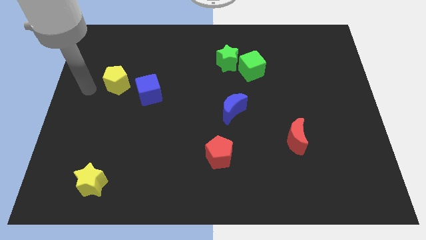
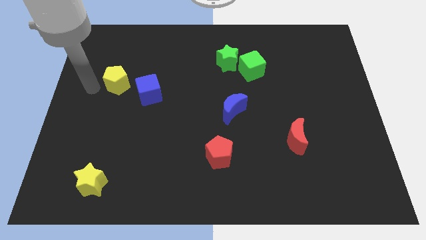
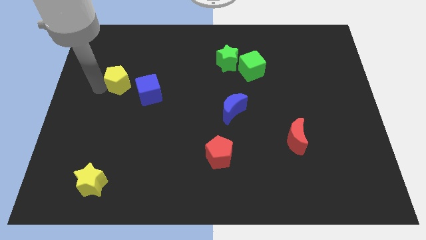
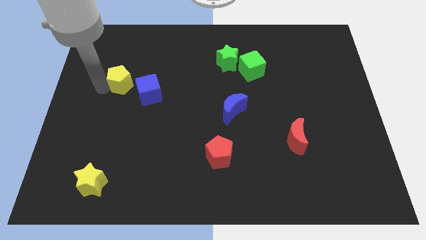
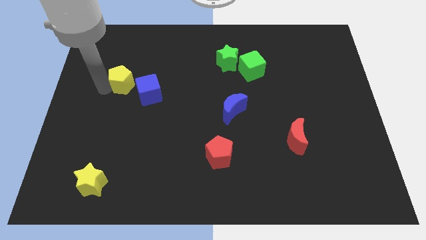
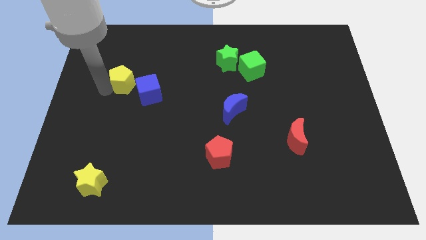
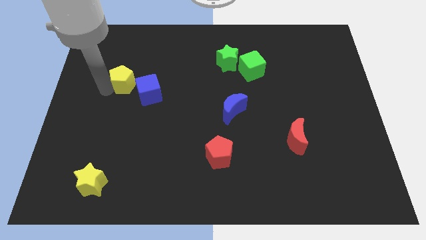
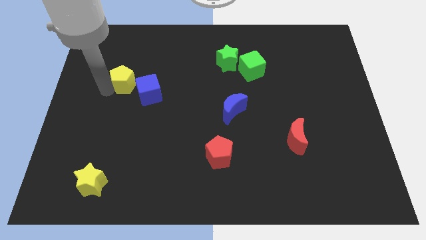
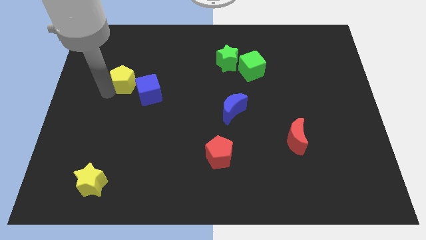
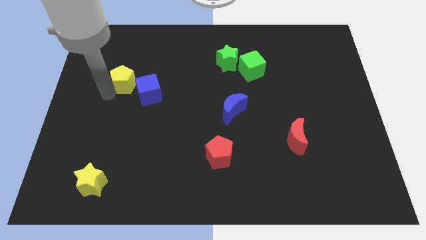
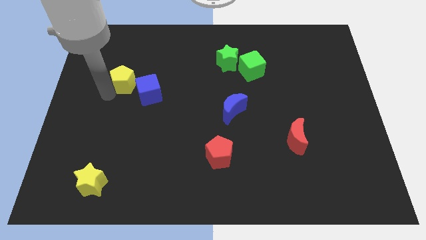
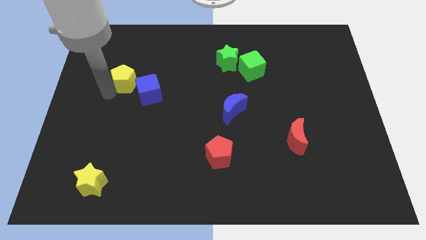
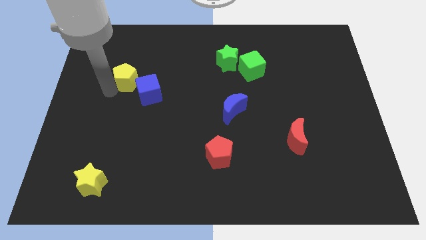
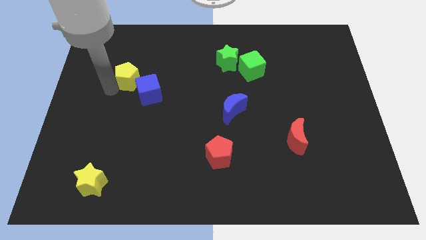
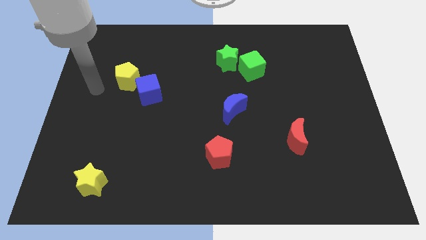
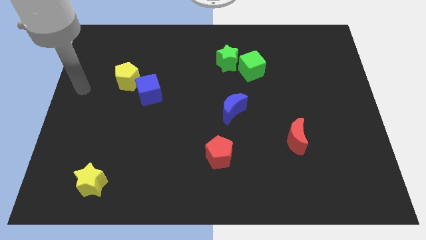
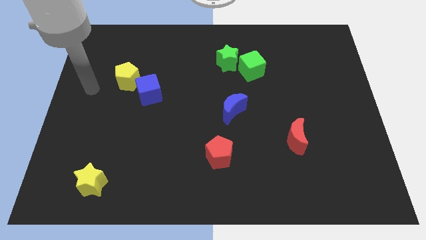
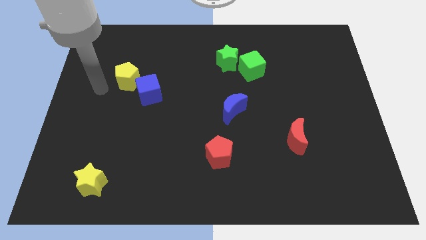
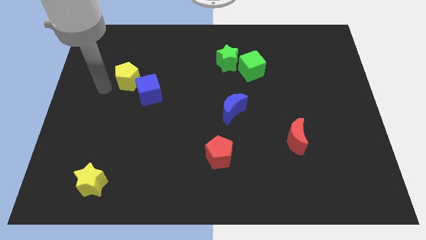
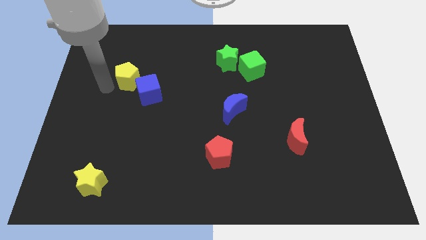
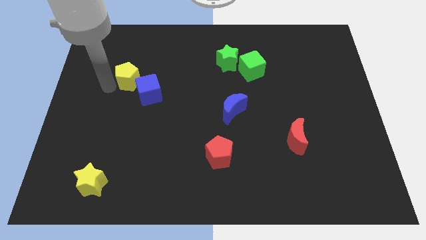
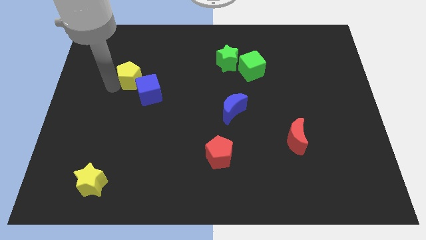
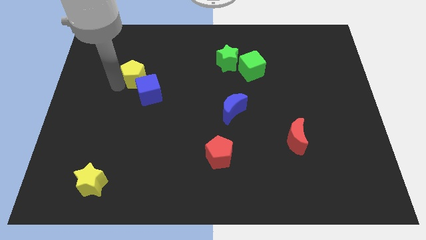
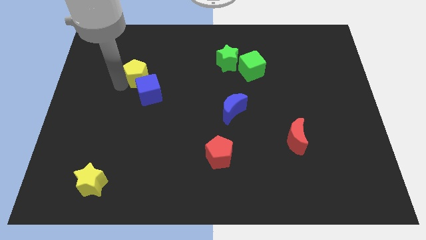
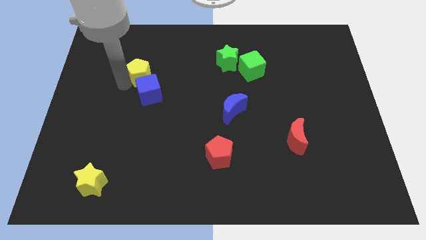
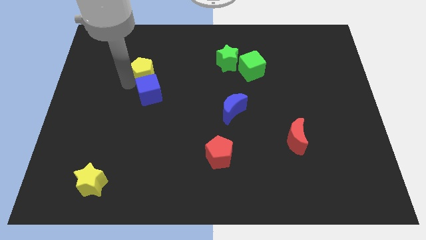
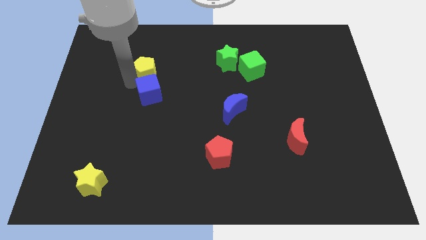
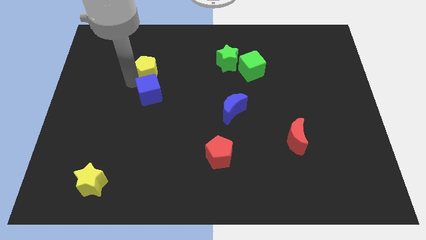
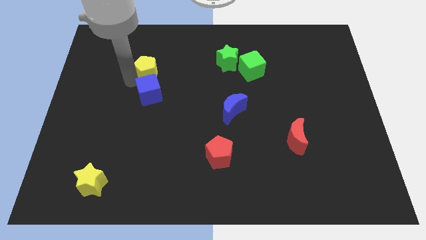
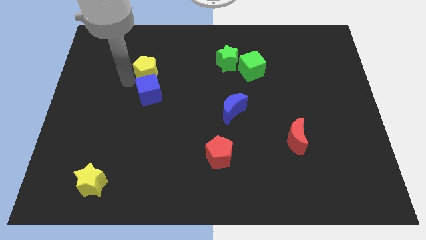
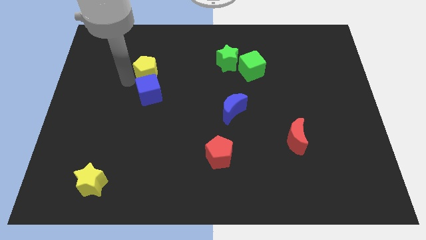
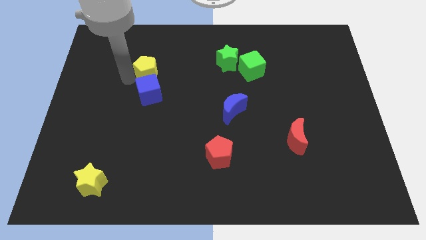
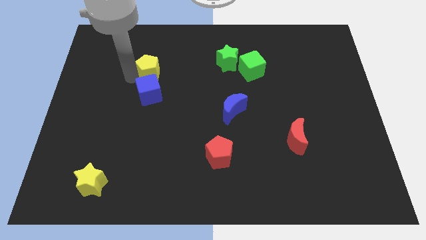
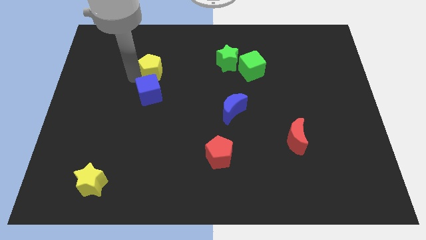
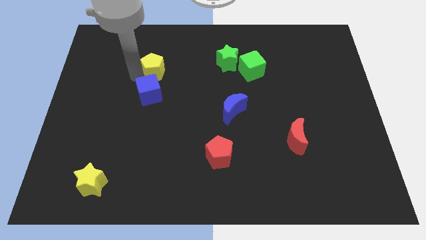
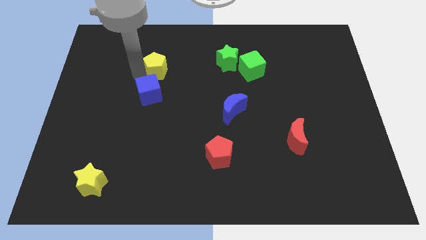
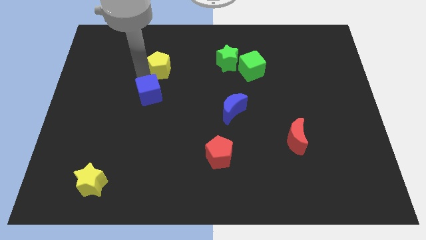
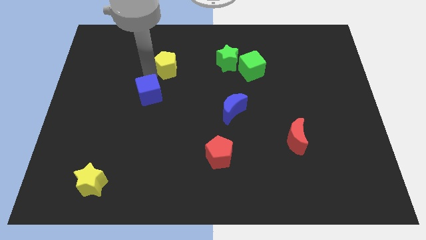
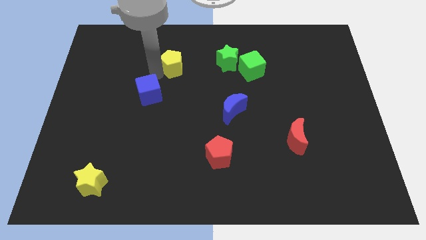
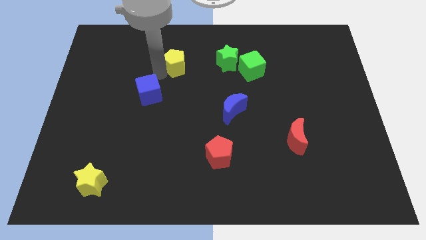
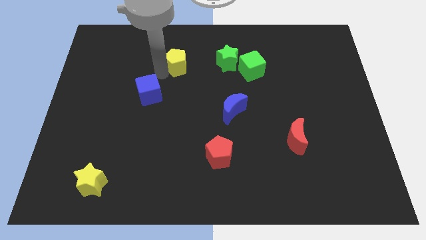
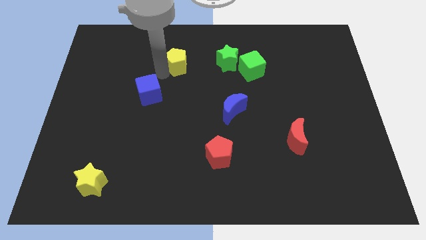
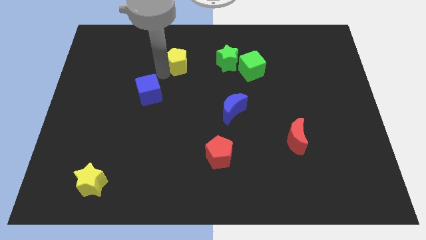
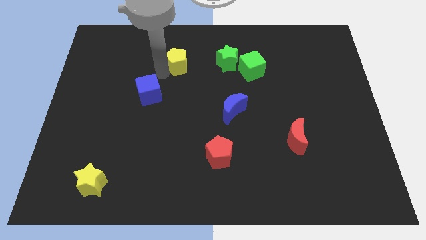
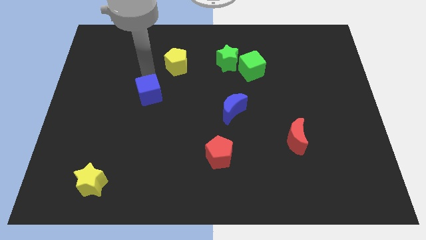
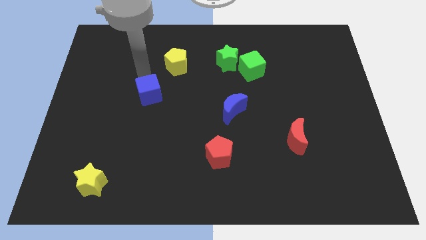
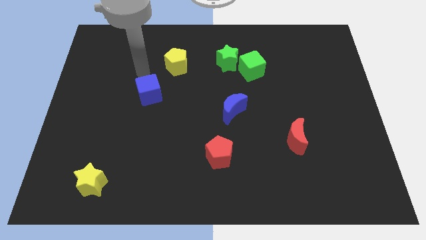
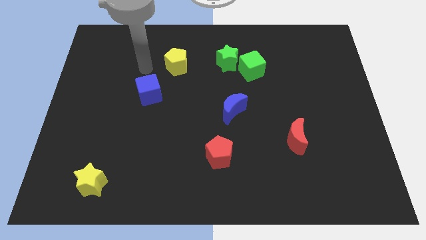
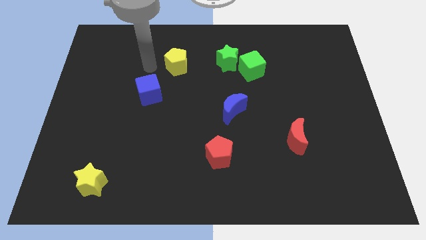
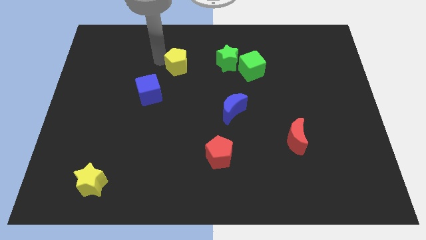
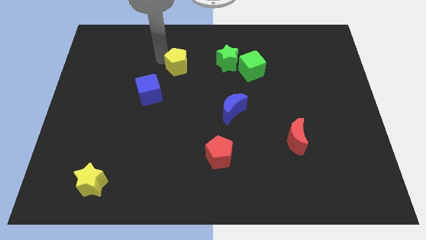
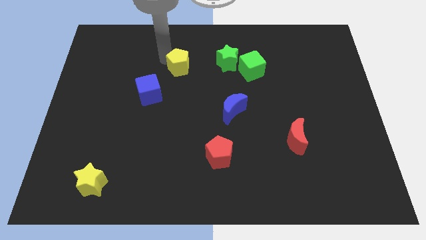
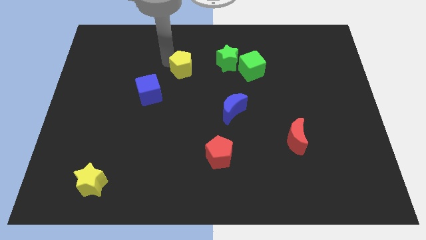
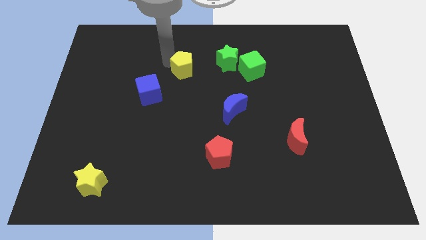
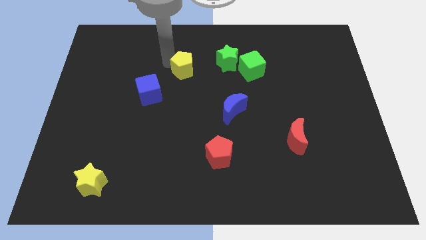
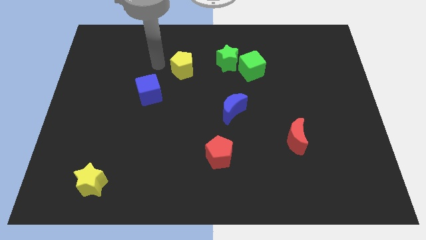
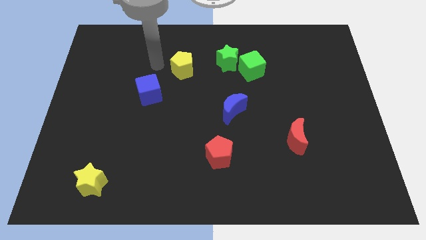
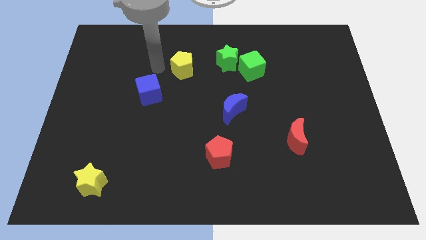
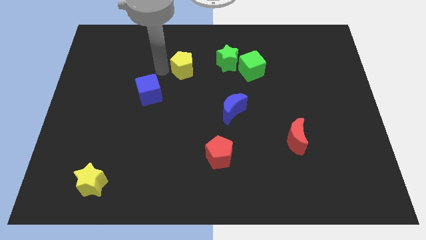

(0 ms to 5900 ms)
place the yellow pentagon diagonal to the left side of the green star

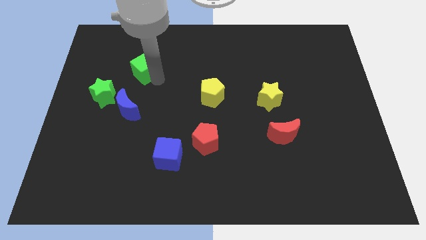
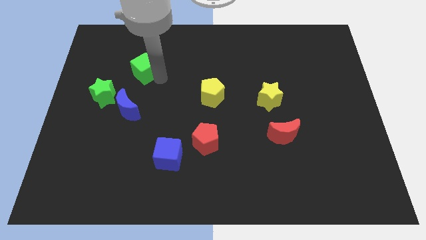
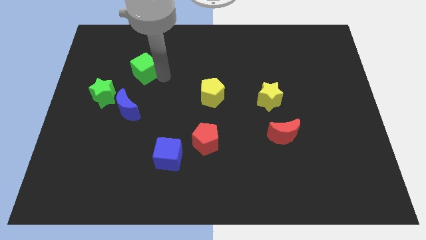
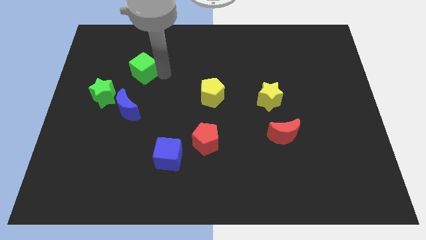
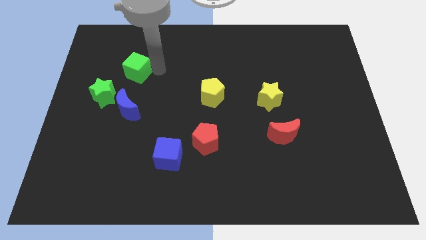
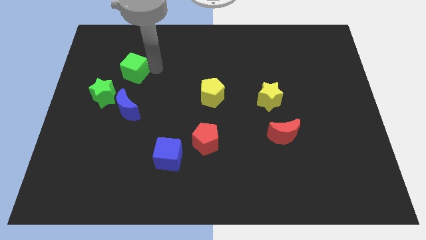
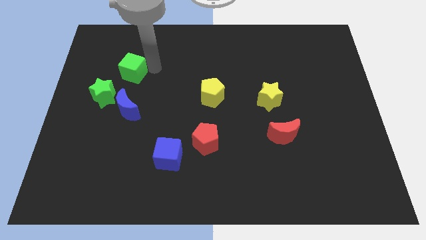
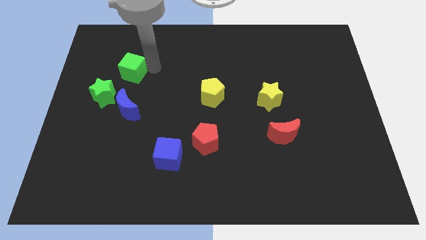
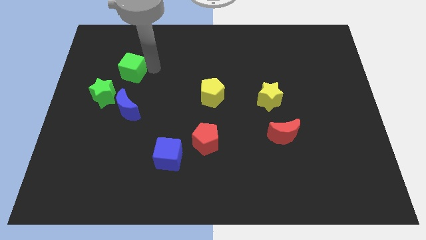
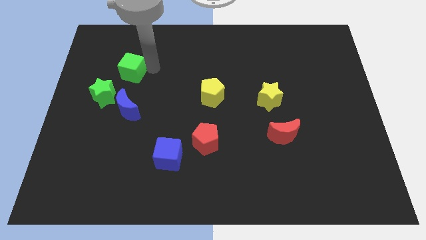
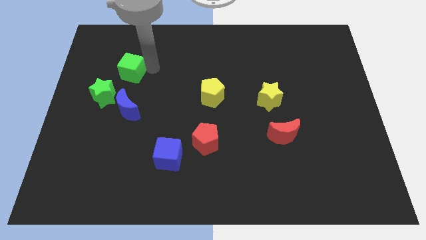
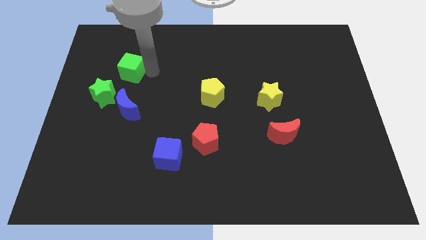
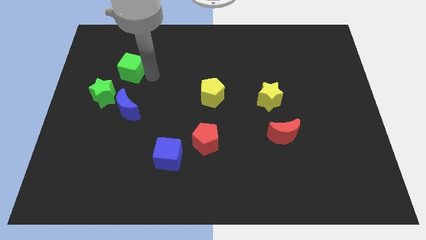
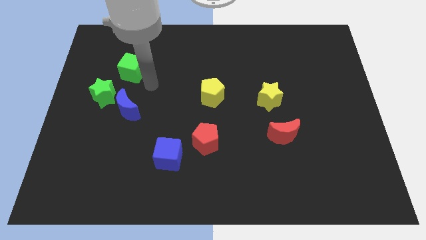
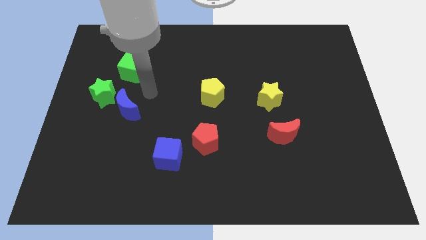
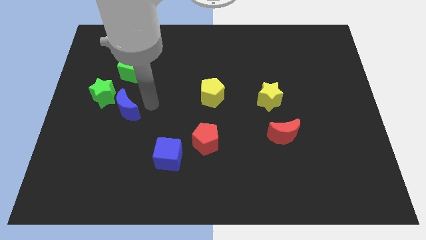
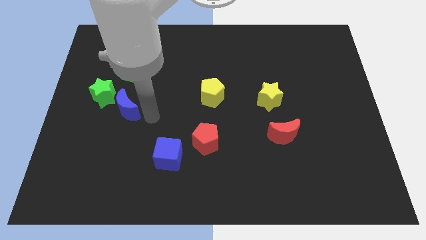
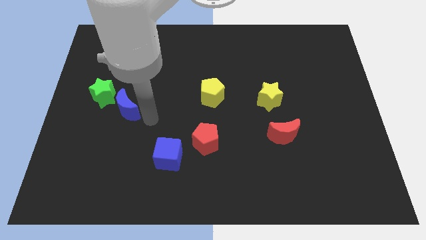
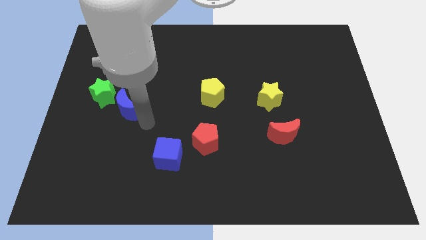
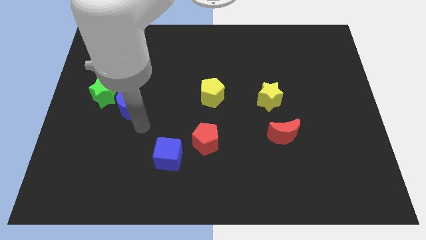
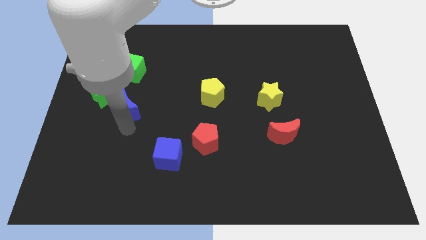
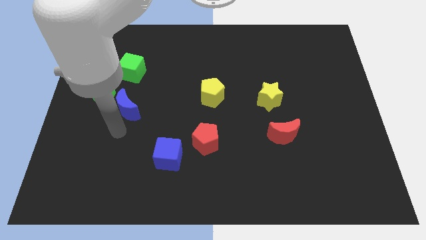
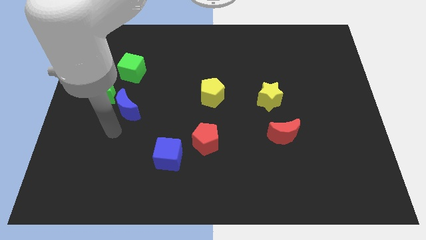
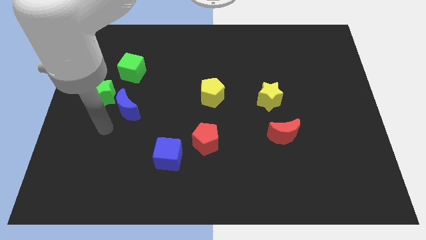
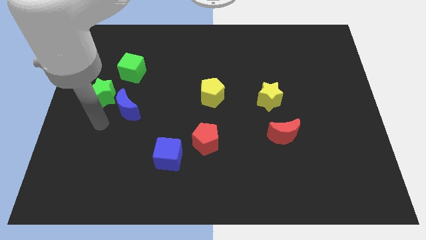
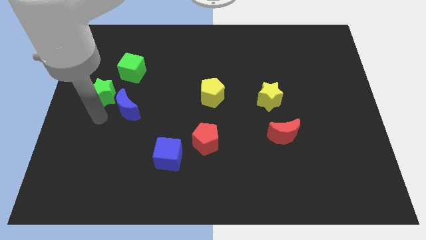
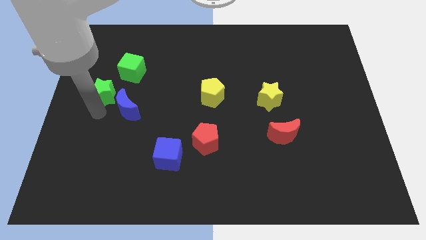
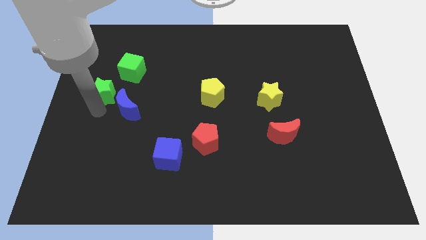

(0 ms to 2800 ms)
place the arm down to the green star

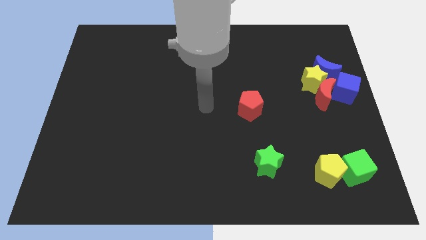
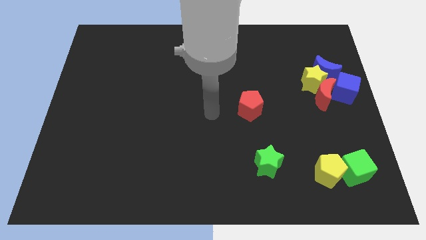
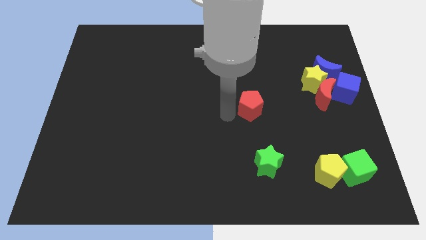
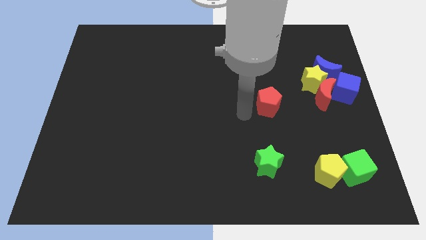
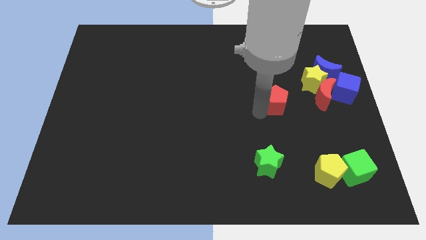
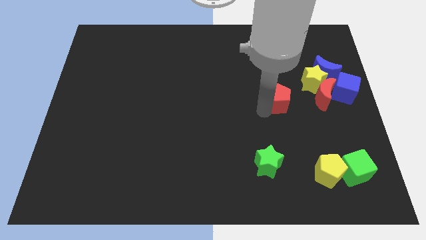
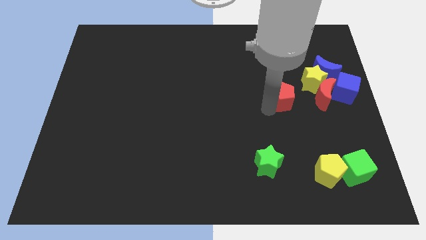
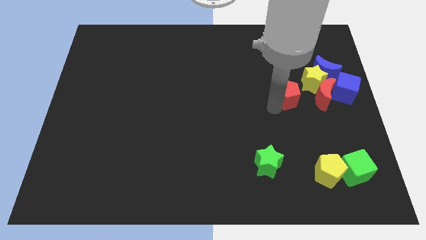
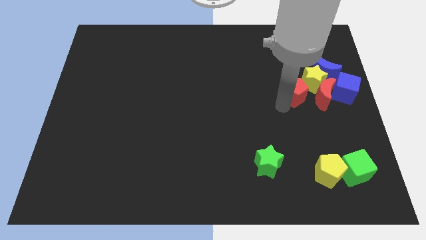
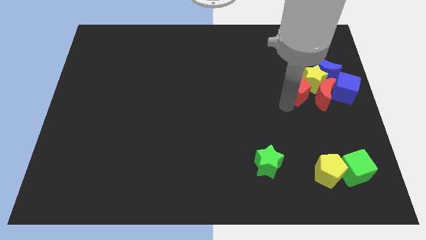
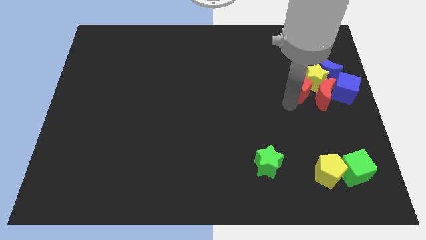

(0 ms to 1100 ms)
push red pentagon above green star
